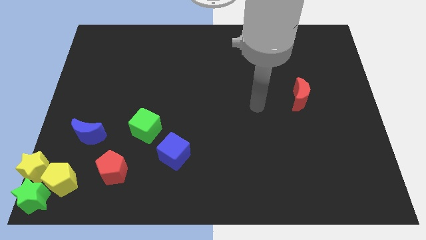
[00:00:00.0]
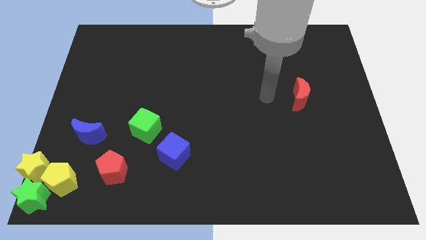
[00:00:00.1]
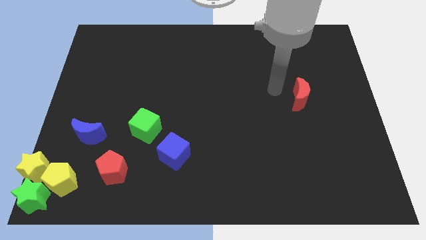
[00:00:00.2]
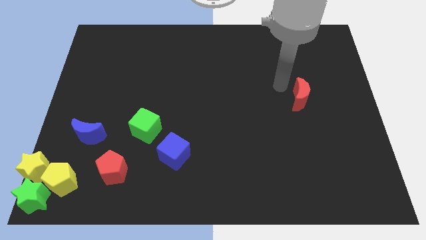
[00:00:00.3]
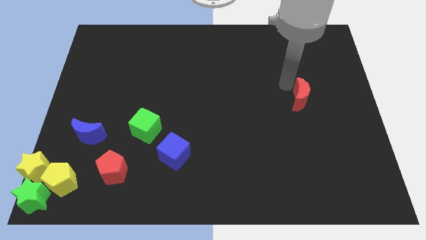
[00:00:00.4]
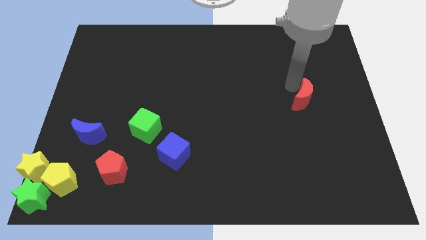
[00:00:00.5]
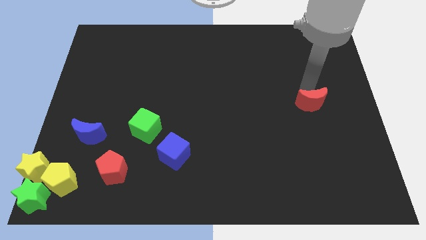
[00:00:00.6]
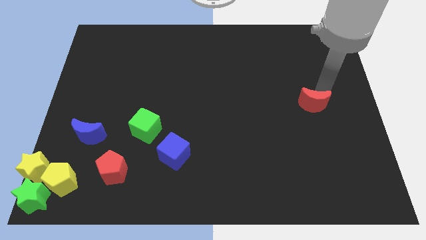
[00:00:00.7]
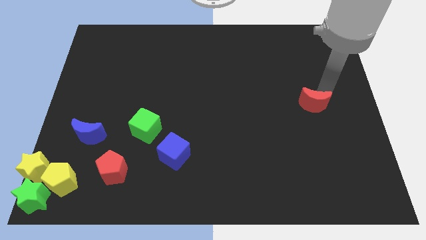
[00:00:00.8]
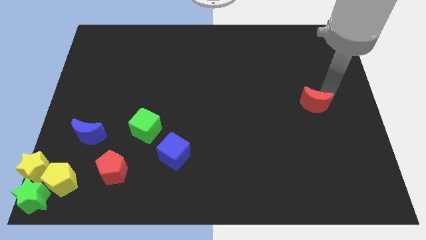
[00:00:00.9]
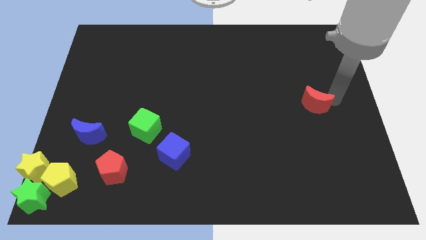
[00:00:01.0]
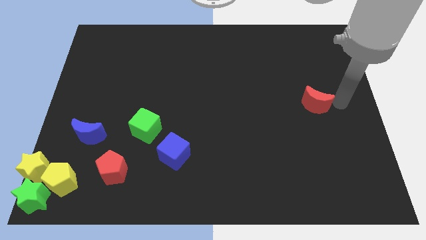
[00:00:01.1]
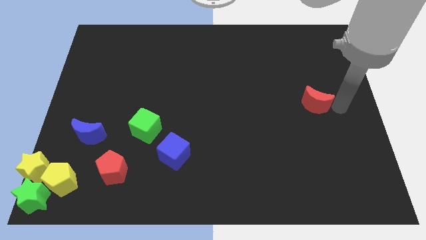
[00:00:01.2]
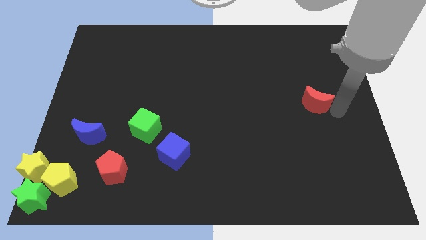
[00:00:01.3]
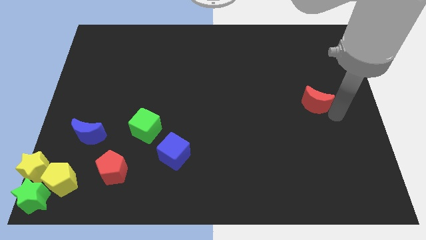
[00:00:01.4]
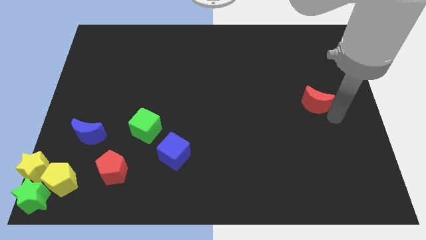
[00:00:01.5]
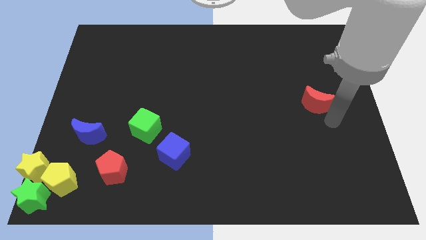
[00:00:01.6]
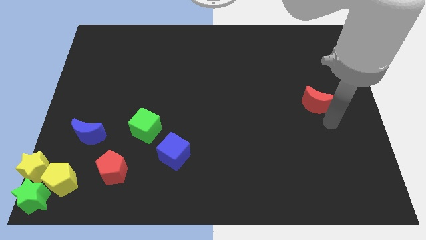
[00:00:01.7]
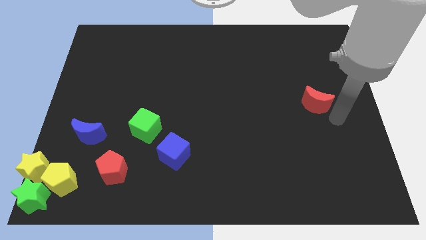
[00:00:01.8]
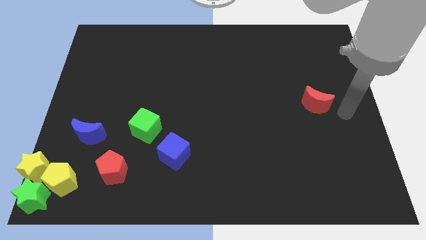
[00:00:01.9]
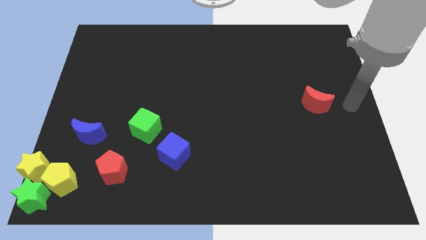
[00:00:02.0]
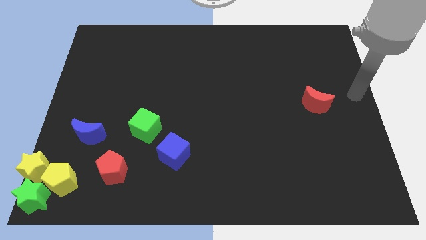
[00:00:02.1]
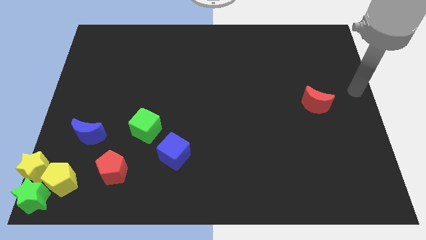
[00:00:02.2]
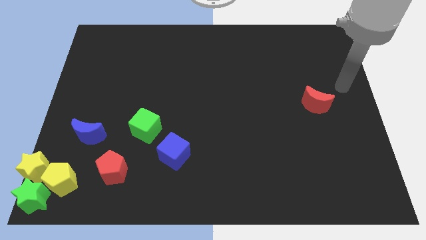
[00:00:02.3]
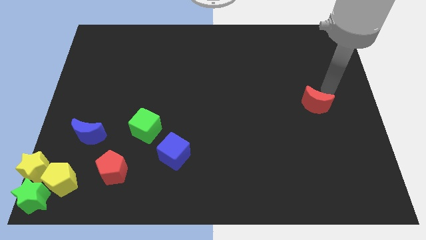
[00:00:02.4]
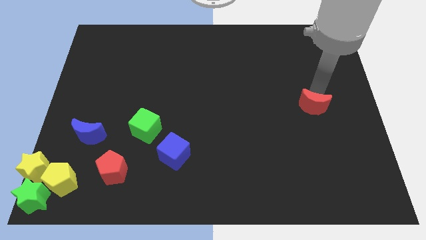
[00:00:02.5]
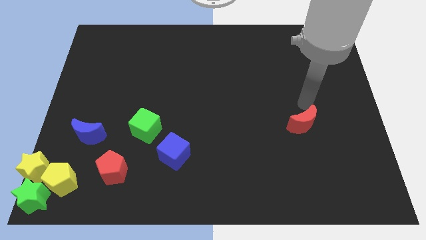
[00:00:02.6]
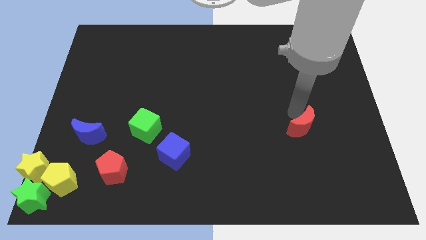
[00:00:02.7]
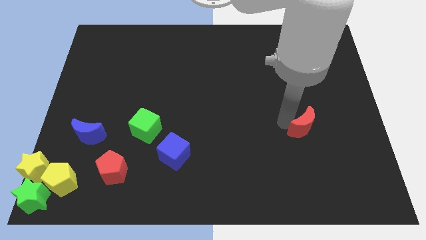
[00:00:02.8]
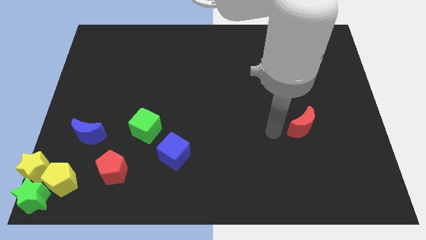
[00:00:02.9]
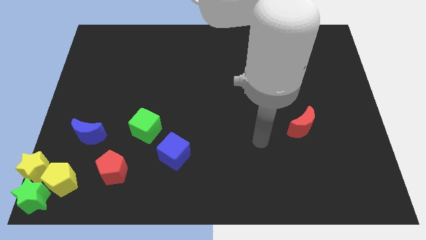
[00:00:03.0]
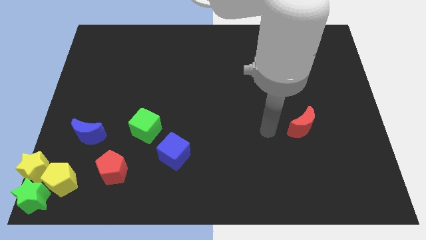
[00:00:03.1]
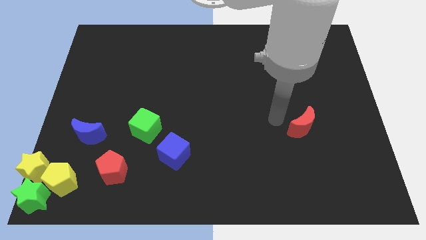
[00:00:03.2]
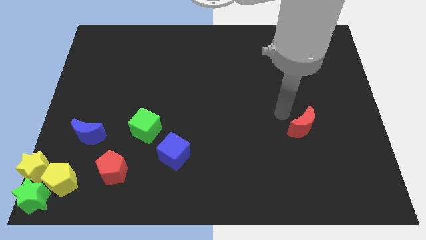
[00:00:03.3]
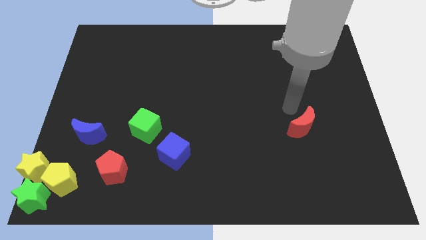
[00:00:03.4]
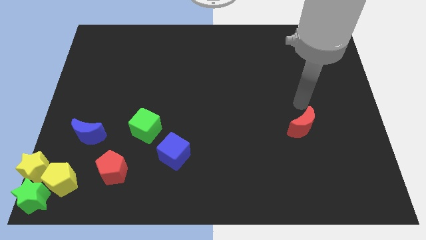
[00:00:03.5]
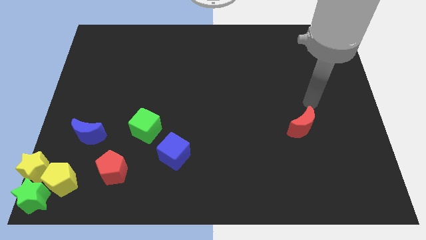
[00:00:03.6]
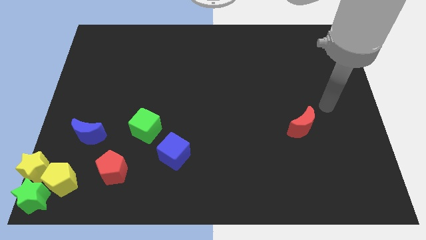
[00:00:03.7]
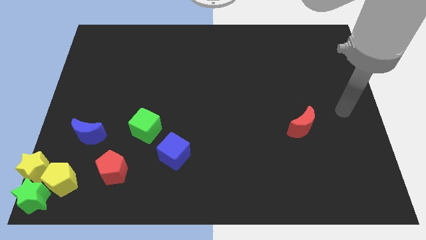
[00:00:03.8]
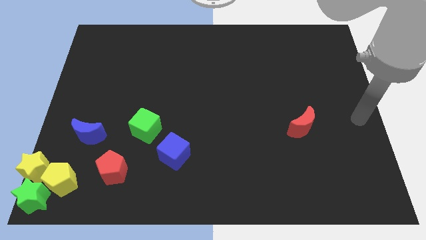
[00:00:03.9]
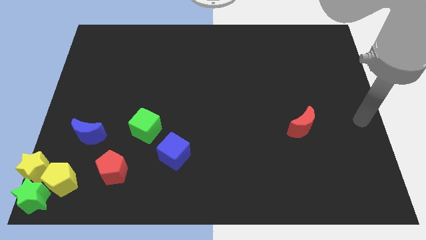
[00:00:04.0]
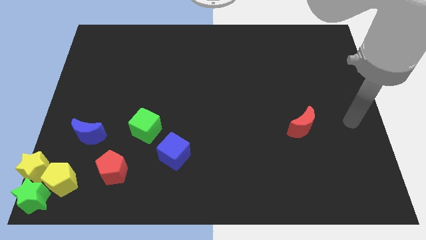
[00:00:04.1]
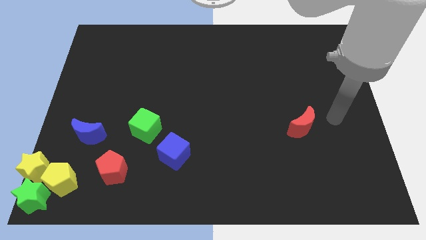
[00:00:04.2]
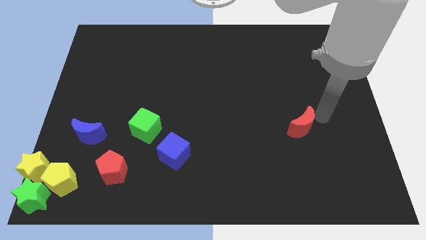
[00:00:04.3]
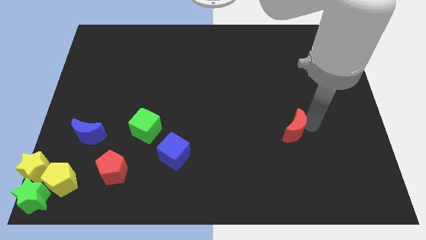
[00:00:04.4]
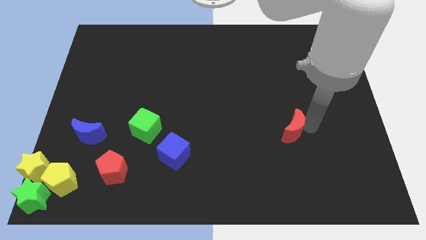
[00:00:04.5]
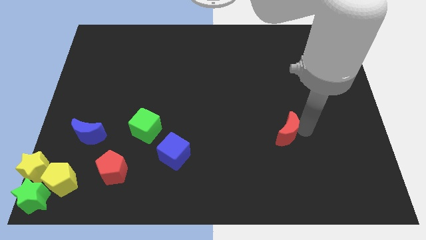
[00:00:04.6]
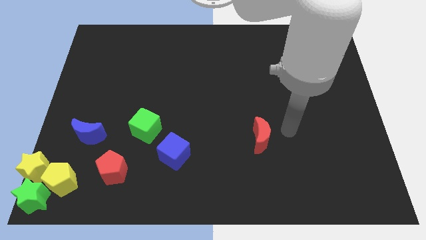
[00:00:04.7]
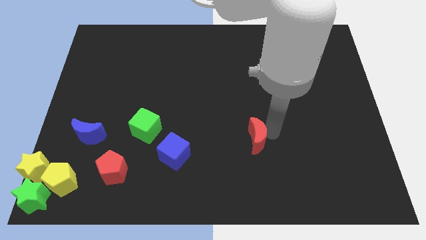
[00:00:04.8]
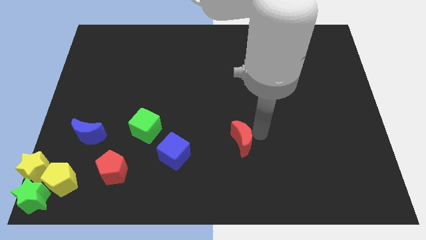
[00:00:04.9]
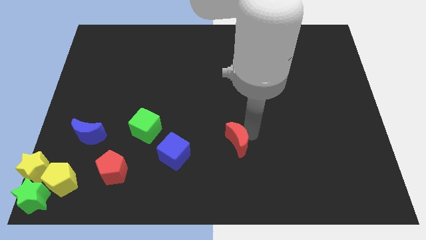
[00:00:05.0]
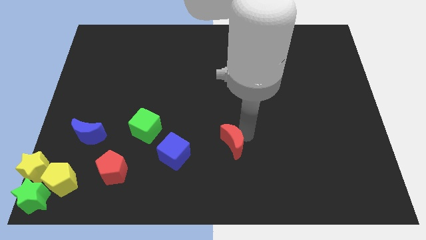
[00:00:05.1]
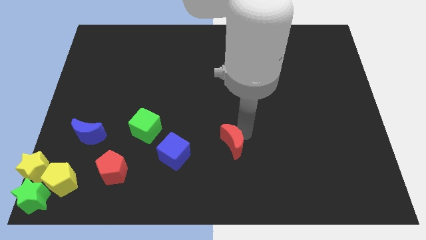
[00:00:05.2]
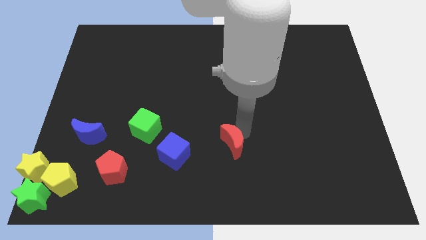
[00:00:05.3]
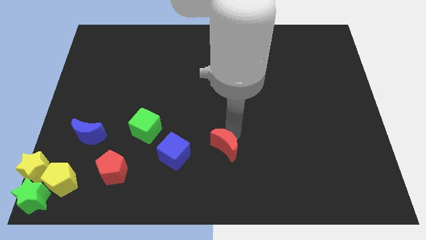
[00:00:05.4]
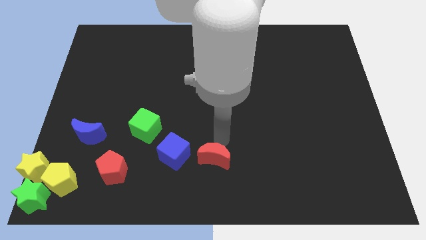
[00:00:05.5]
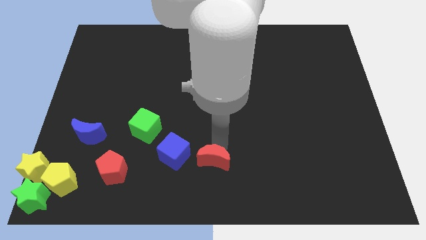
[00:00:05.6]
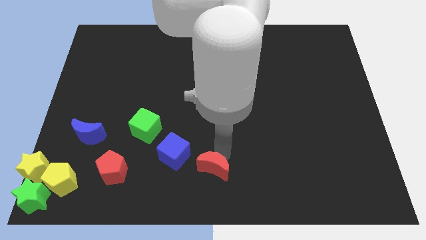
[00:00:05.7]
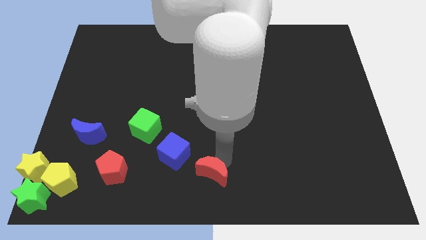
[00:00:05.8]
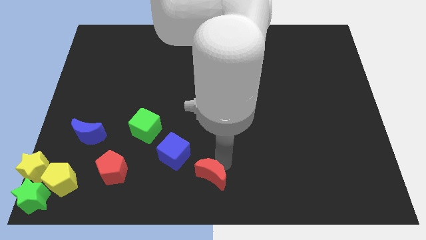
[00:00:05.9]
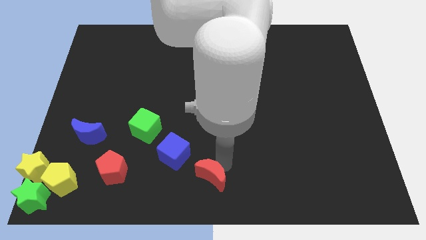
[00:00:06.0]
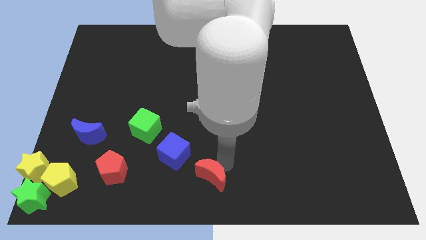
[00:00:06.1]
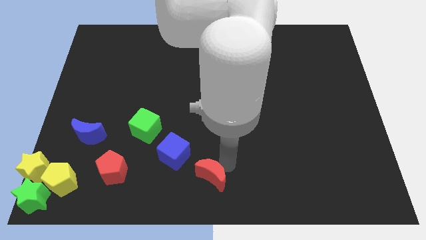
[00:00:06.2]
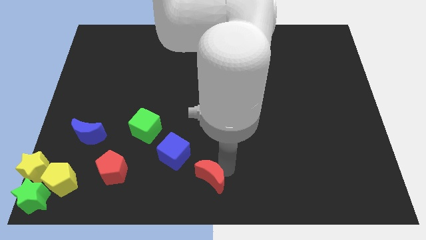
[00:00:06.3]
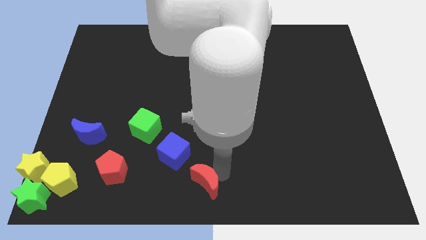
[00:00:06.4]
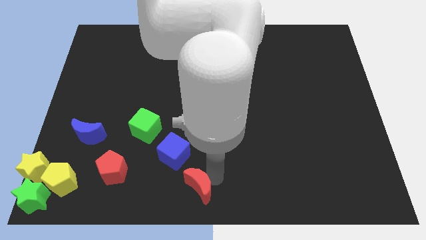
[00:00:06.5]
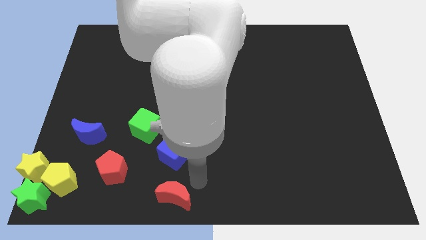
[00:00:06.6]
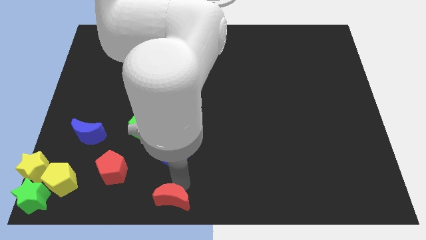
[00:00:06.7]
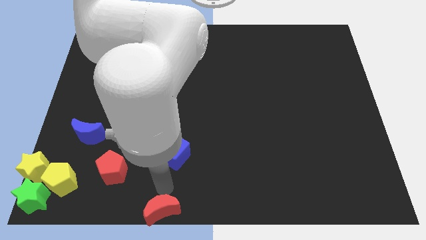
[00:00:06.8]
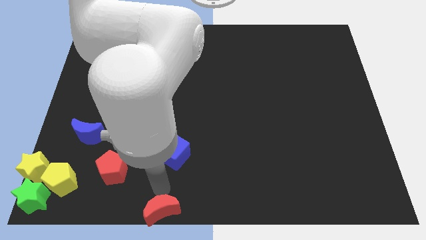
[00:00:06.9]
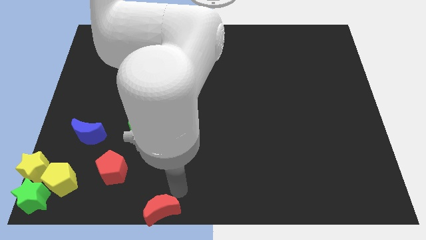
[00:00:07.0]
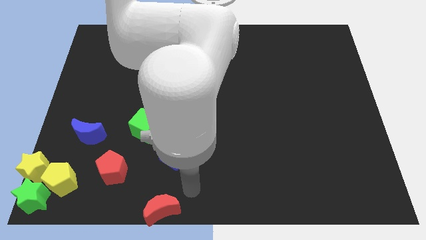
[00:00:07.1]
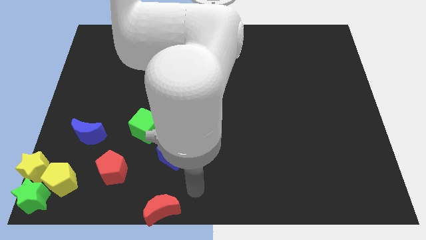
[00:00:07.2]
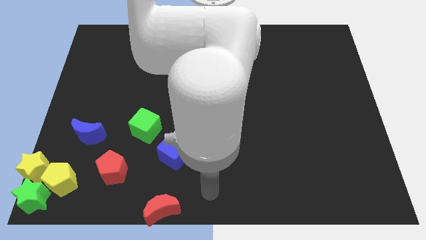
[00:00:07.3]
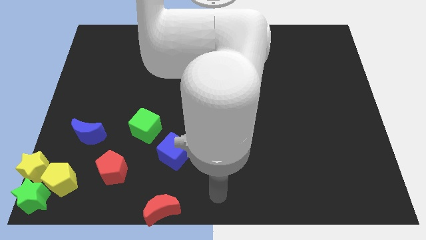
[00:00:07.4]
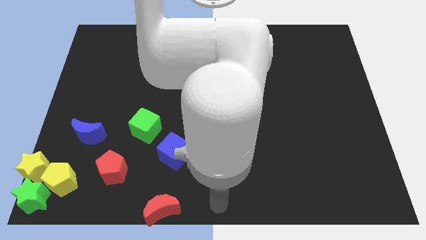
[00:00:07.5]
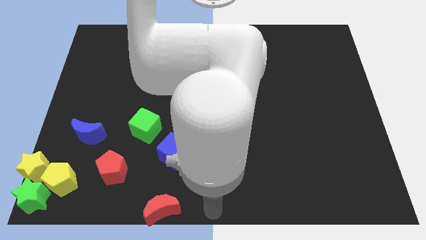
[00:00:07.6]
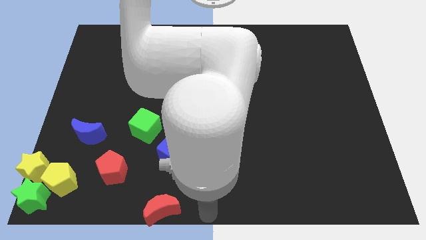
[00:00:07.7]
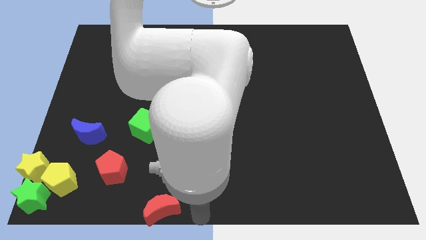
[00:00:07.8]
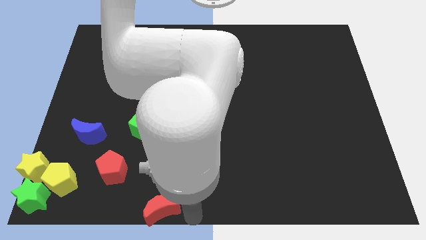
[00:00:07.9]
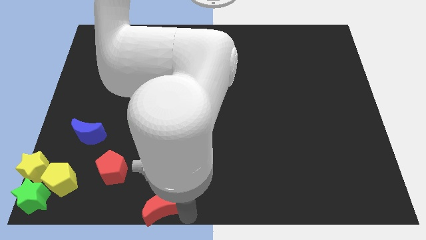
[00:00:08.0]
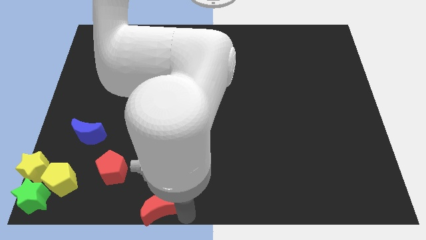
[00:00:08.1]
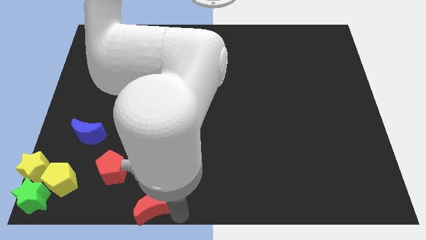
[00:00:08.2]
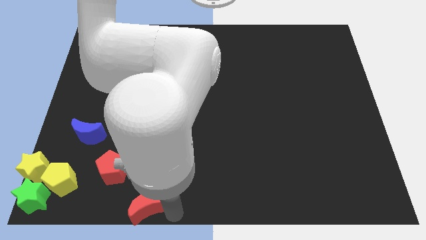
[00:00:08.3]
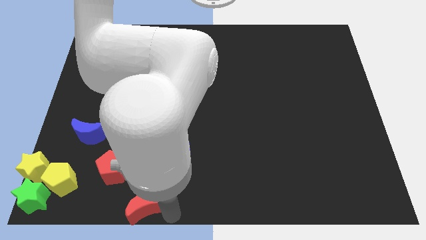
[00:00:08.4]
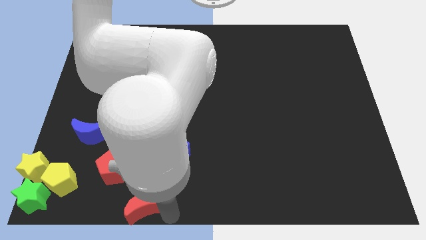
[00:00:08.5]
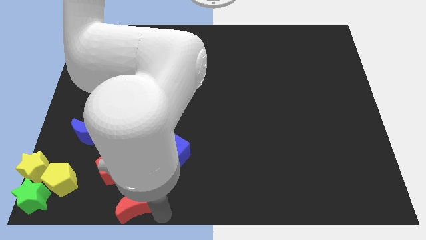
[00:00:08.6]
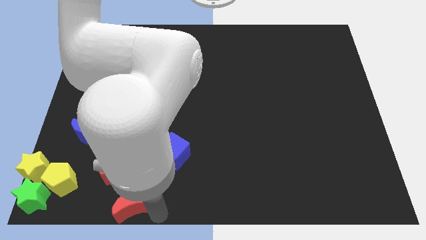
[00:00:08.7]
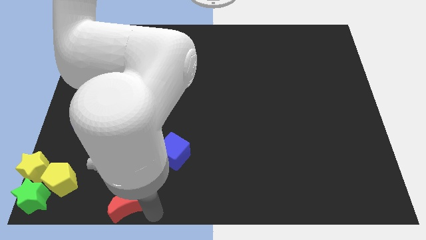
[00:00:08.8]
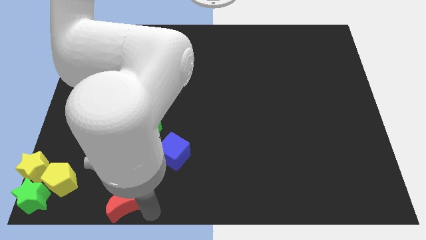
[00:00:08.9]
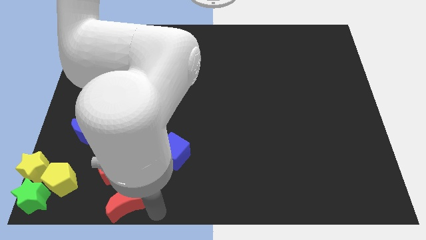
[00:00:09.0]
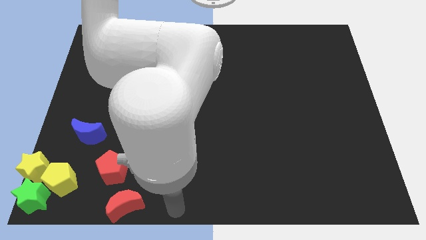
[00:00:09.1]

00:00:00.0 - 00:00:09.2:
push the red crescent to the bottom left corner of the board
